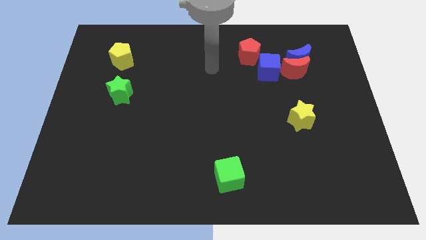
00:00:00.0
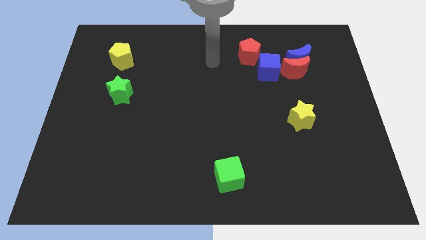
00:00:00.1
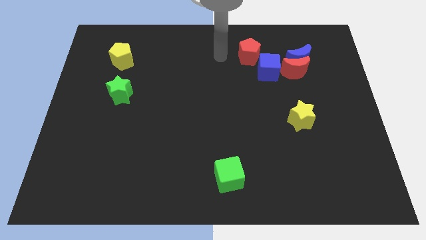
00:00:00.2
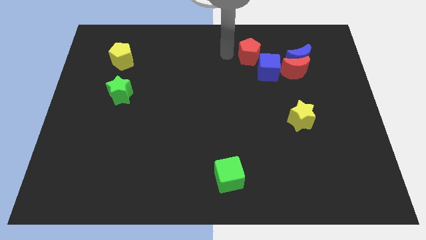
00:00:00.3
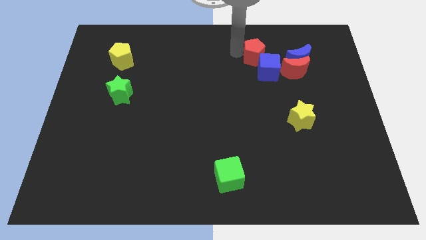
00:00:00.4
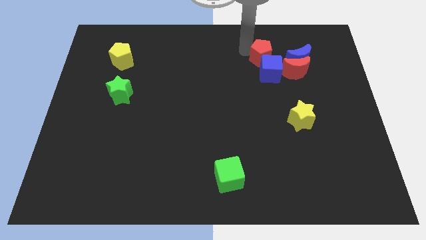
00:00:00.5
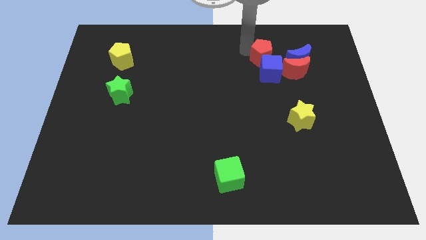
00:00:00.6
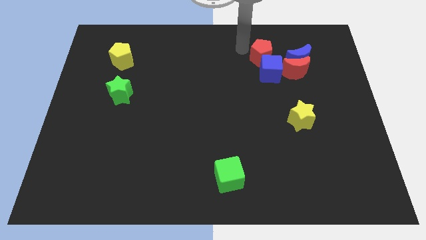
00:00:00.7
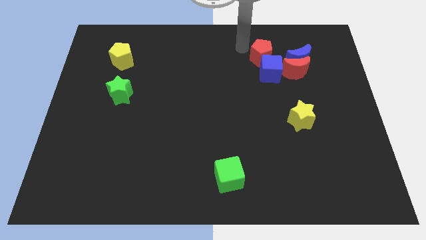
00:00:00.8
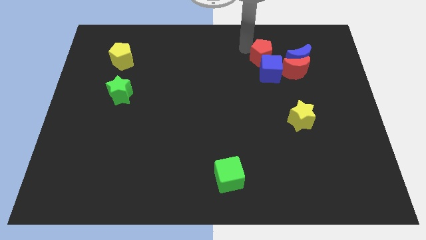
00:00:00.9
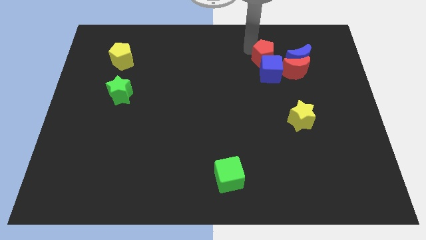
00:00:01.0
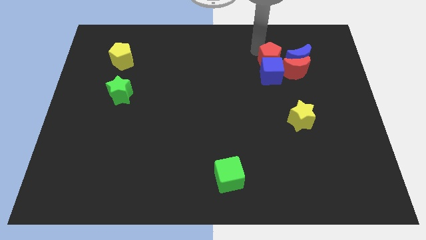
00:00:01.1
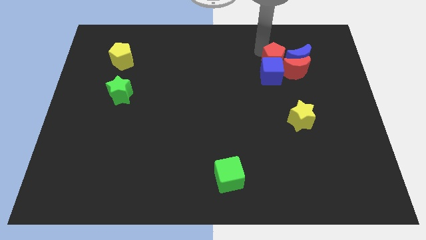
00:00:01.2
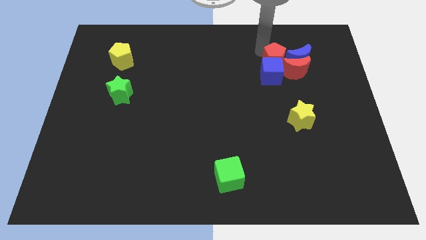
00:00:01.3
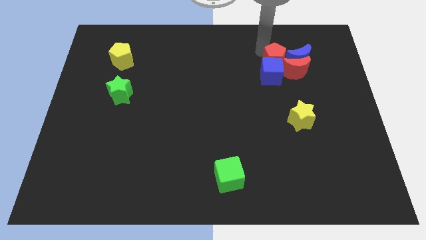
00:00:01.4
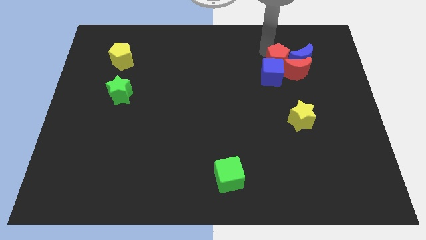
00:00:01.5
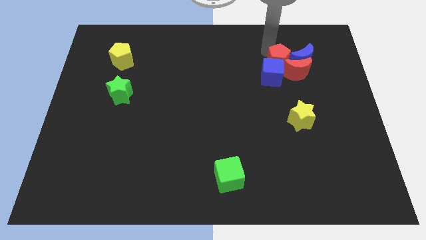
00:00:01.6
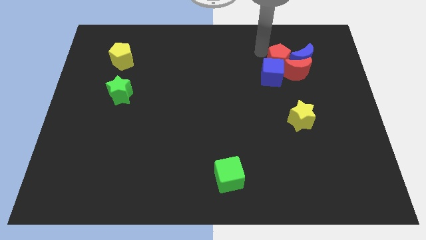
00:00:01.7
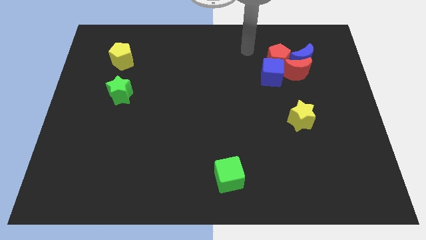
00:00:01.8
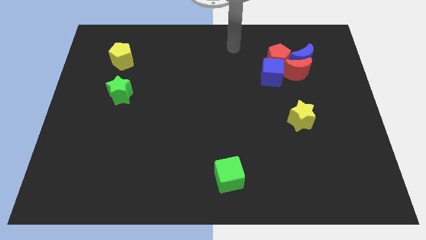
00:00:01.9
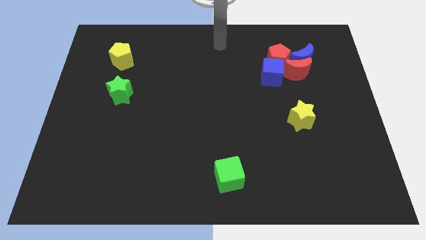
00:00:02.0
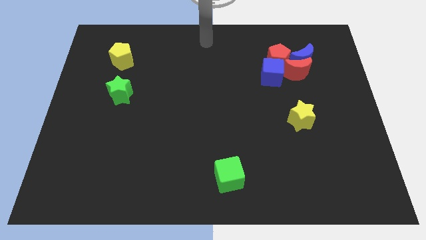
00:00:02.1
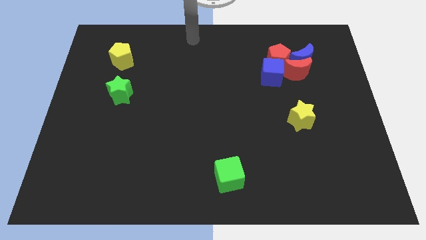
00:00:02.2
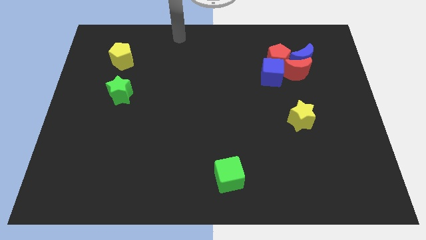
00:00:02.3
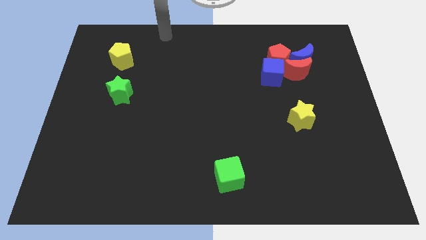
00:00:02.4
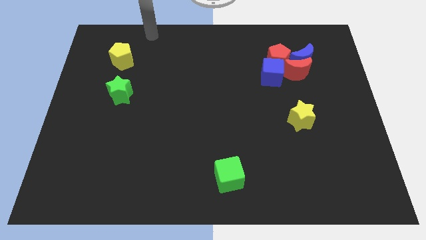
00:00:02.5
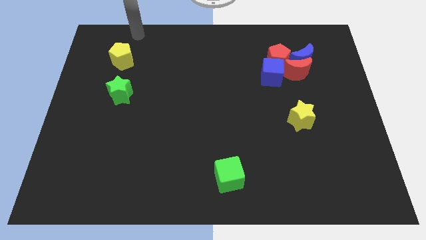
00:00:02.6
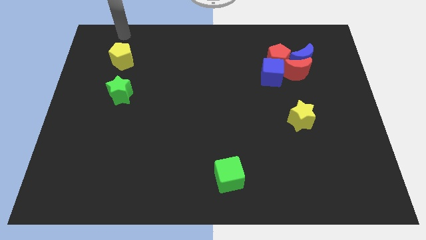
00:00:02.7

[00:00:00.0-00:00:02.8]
push the red pentagon into the blue moon

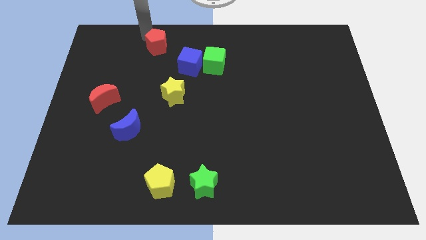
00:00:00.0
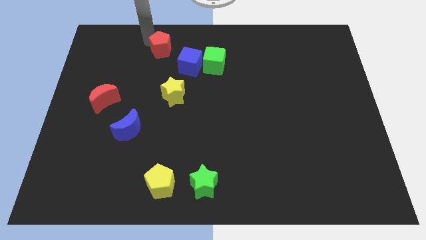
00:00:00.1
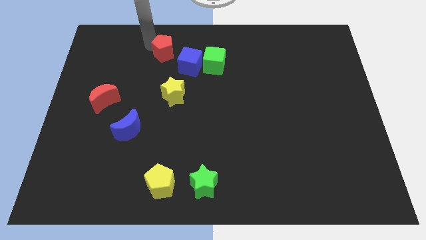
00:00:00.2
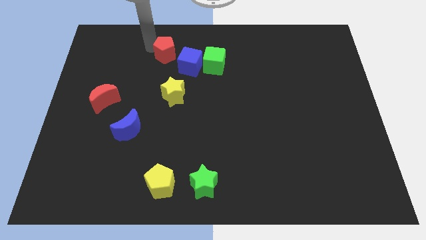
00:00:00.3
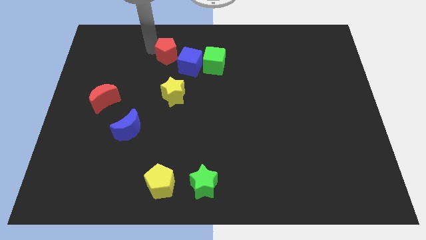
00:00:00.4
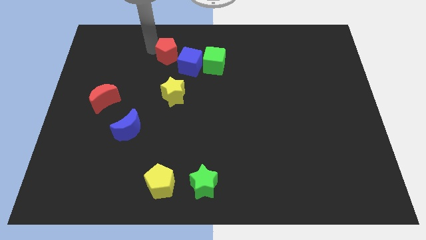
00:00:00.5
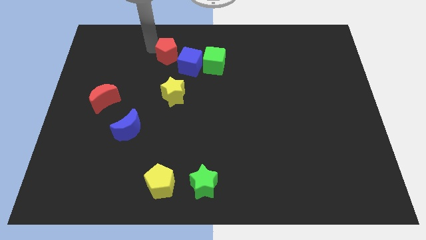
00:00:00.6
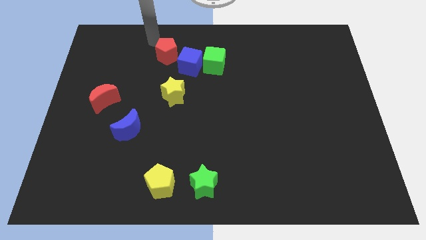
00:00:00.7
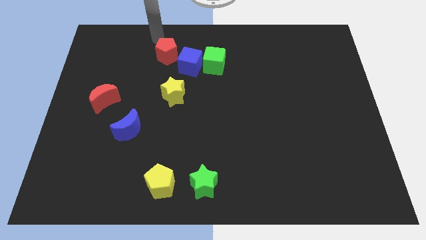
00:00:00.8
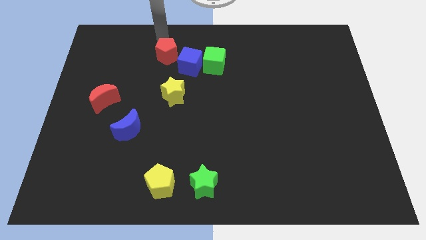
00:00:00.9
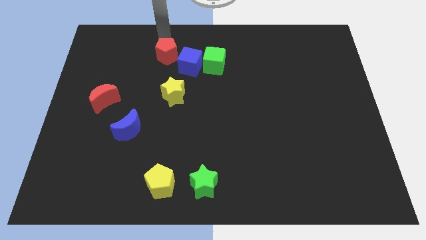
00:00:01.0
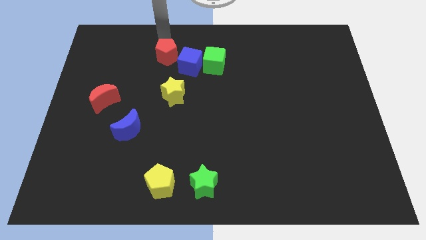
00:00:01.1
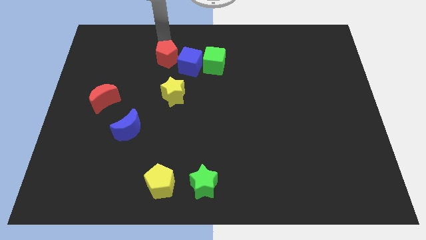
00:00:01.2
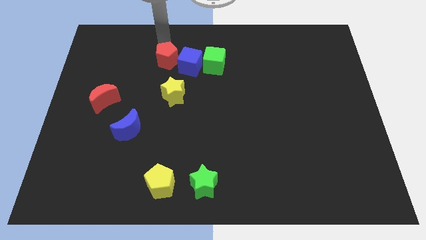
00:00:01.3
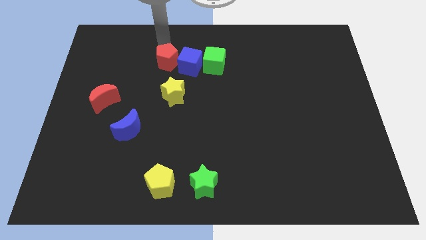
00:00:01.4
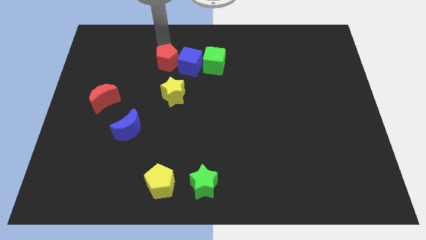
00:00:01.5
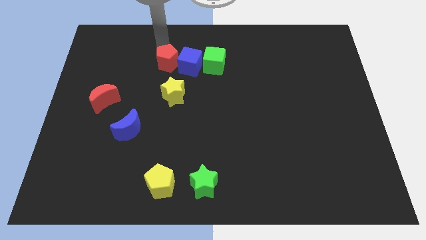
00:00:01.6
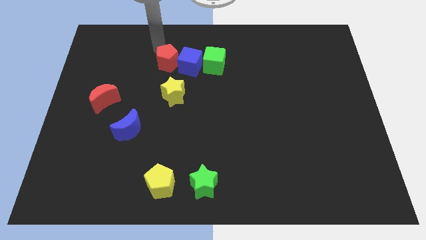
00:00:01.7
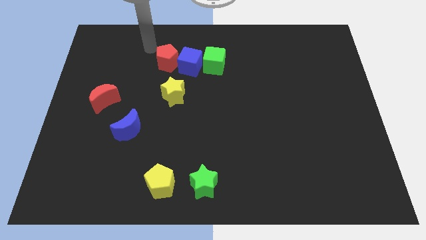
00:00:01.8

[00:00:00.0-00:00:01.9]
push the red pentagon close to the blue cube

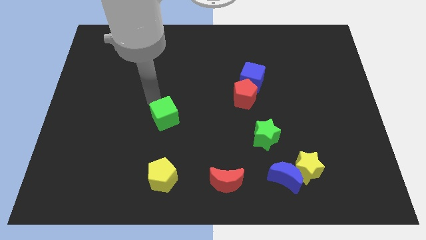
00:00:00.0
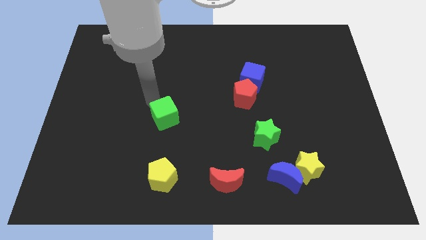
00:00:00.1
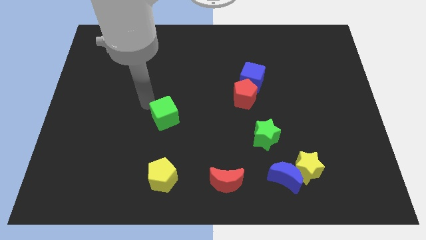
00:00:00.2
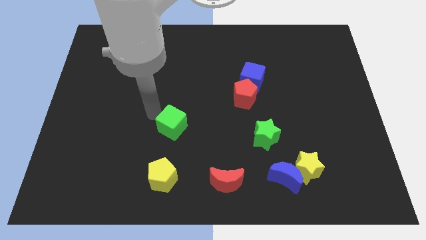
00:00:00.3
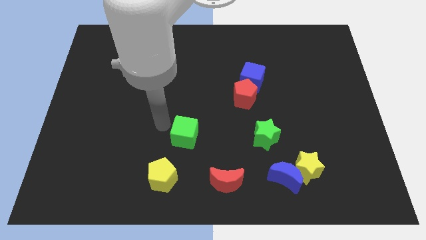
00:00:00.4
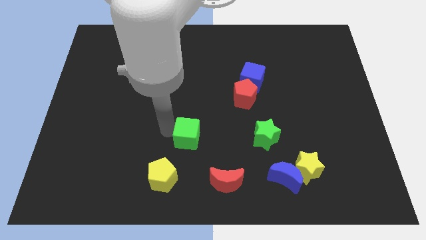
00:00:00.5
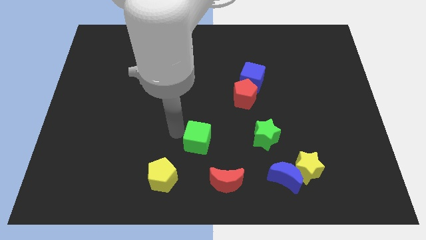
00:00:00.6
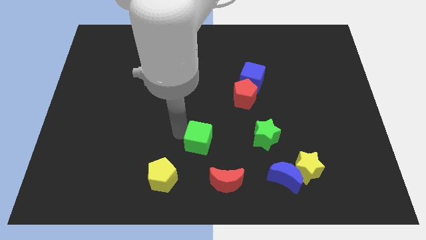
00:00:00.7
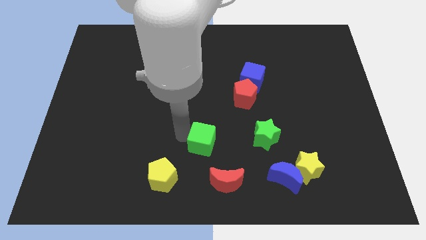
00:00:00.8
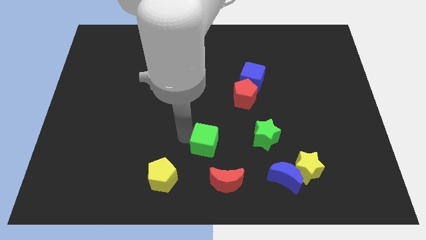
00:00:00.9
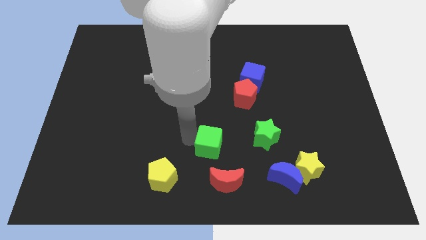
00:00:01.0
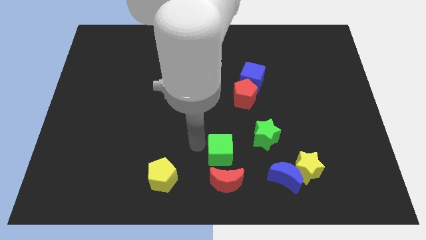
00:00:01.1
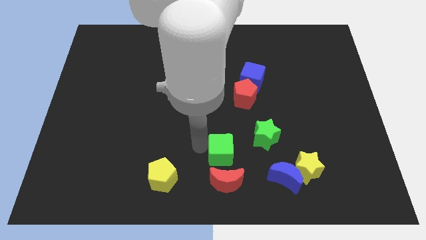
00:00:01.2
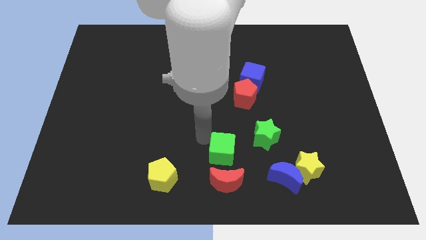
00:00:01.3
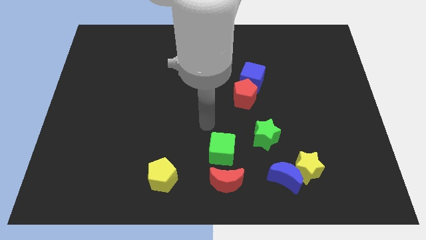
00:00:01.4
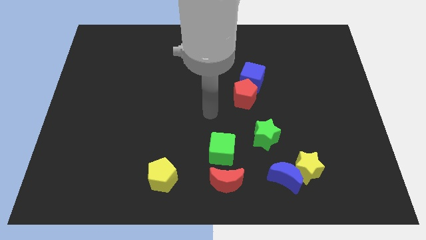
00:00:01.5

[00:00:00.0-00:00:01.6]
place the green cube above the red crescent

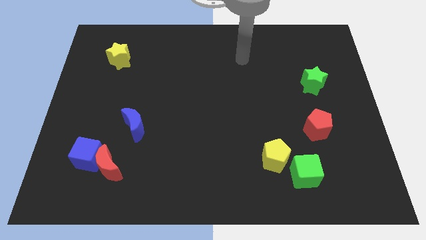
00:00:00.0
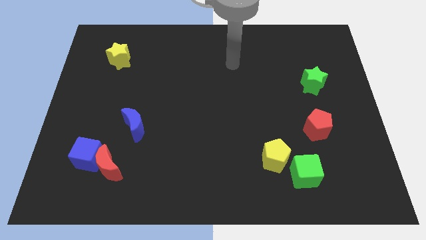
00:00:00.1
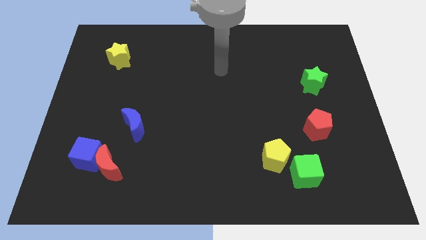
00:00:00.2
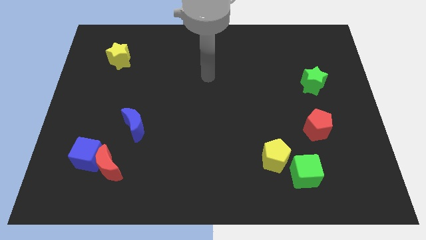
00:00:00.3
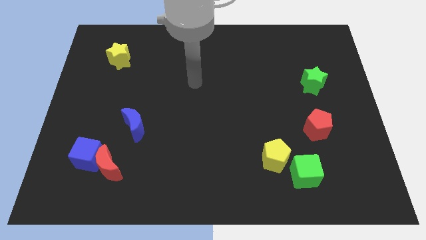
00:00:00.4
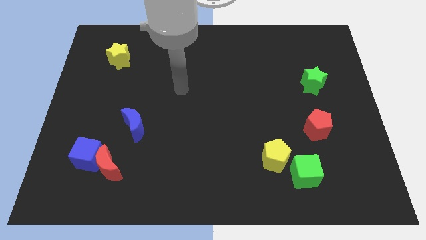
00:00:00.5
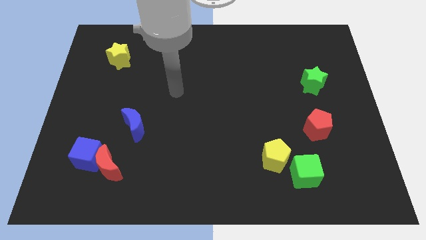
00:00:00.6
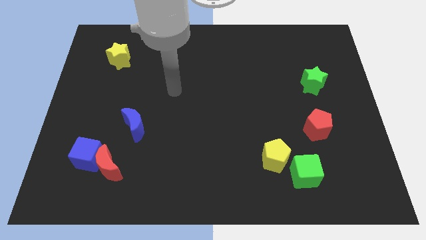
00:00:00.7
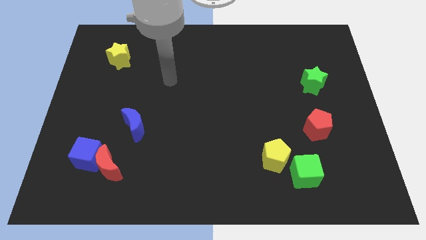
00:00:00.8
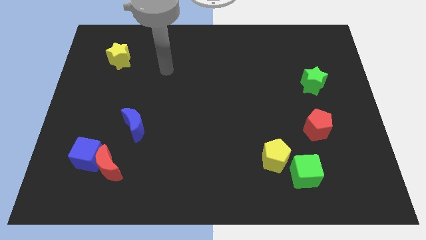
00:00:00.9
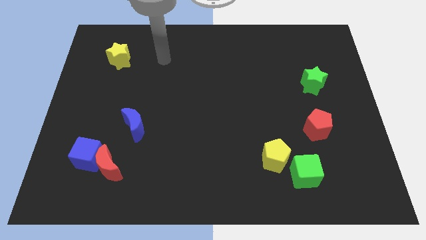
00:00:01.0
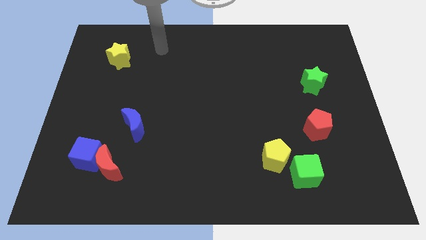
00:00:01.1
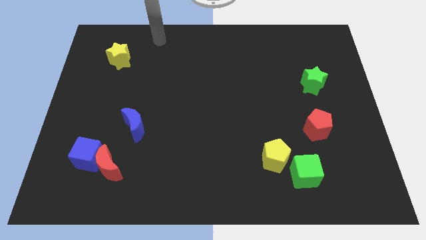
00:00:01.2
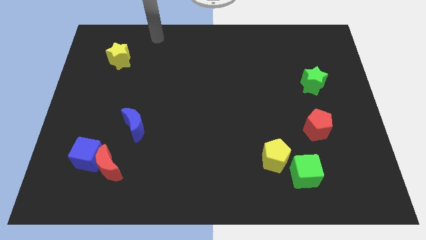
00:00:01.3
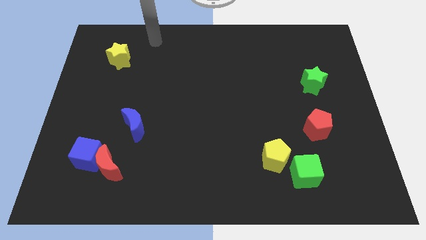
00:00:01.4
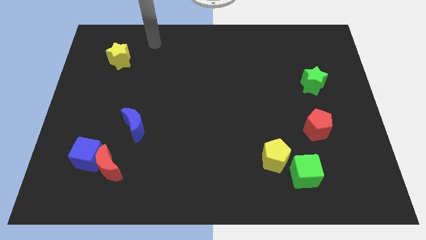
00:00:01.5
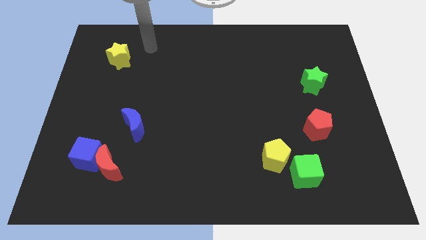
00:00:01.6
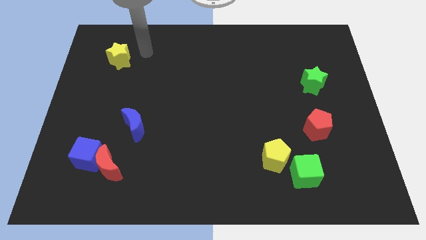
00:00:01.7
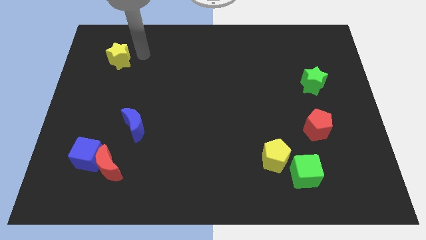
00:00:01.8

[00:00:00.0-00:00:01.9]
move your arm towards yellow star

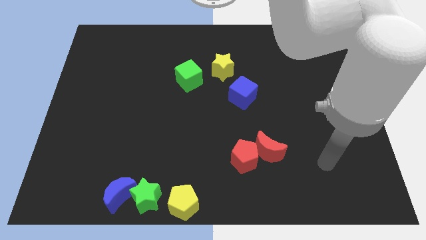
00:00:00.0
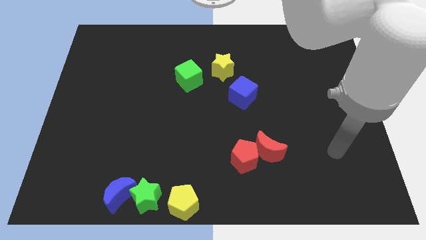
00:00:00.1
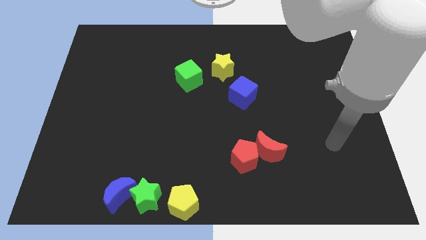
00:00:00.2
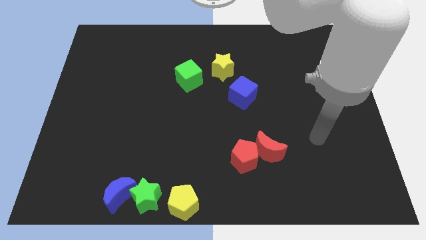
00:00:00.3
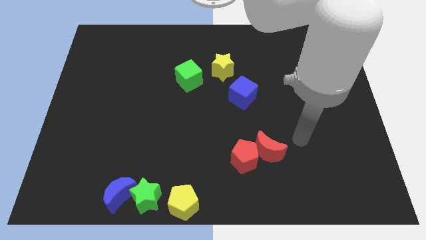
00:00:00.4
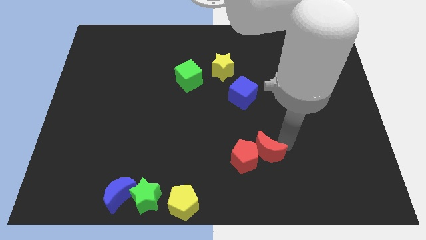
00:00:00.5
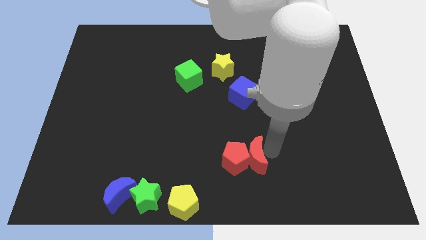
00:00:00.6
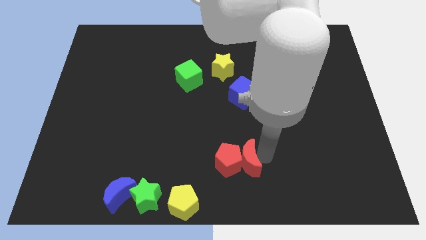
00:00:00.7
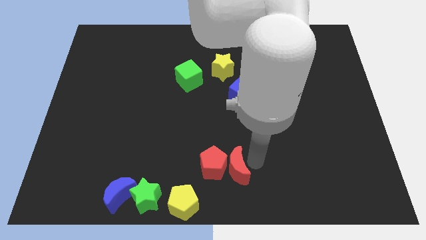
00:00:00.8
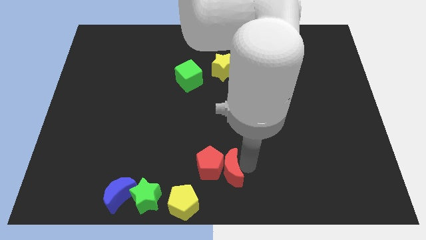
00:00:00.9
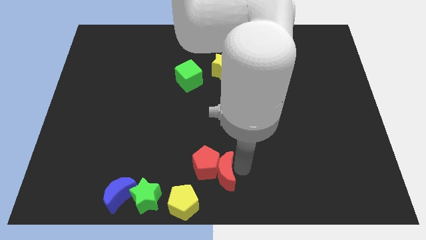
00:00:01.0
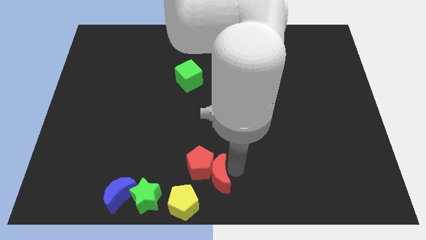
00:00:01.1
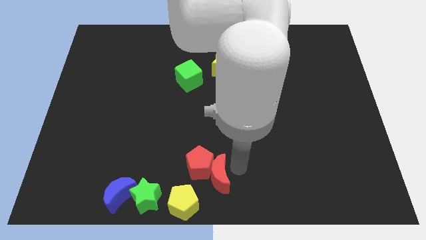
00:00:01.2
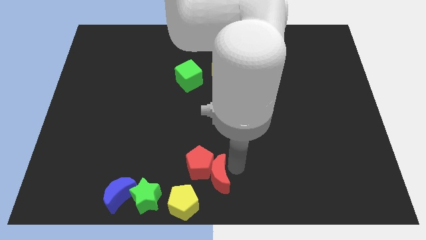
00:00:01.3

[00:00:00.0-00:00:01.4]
push the red blocks towards the bottom center of the board
